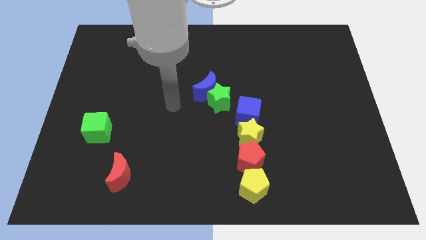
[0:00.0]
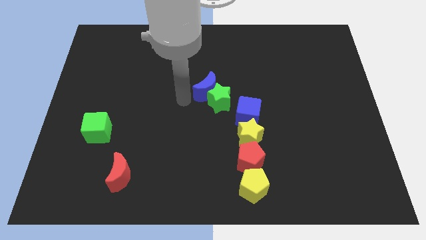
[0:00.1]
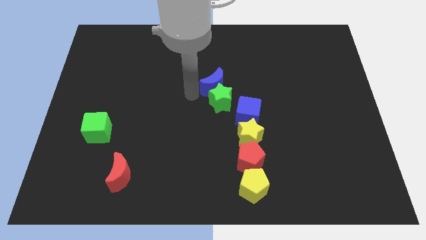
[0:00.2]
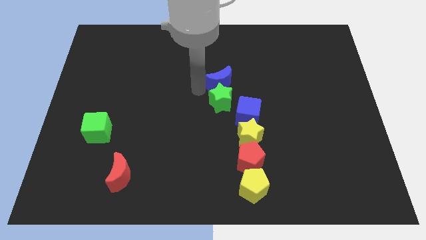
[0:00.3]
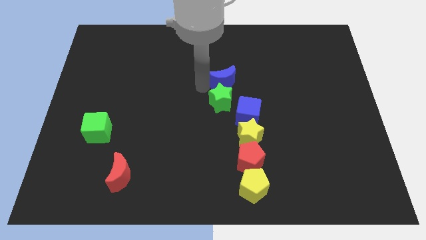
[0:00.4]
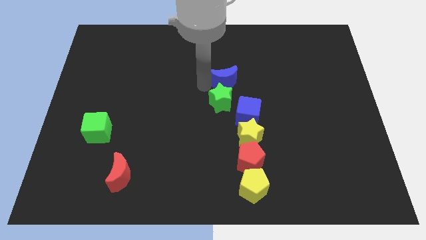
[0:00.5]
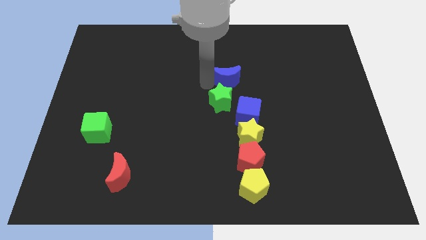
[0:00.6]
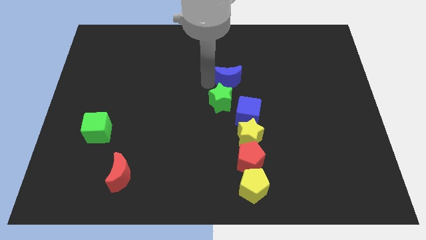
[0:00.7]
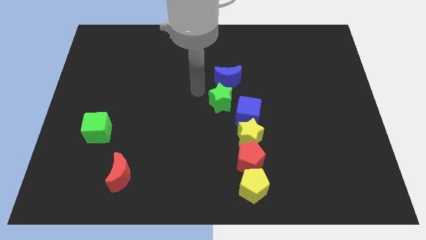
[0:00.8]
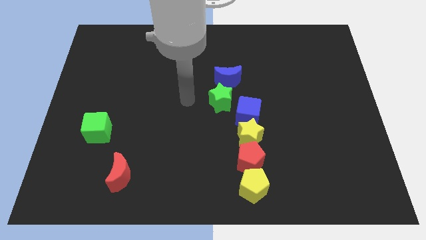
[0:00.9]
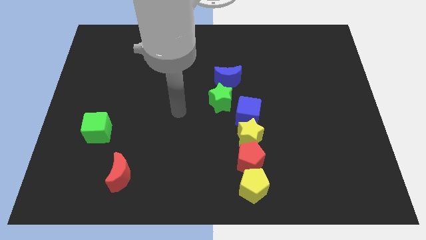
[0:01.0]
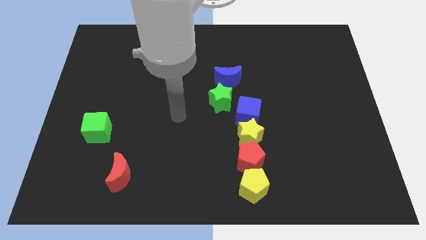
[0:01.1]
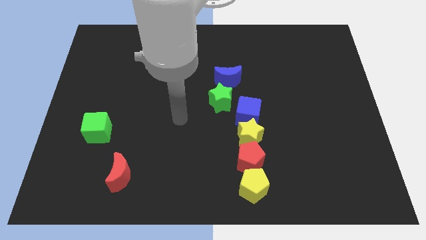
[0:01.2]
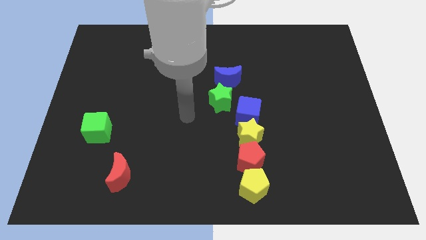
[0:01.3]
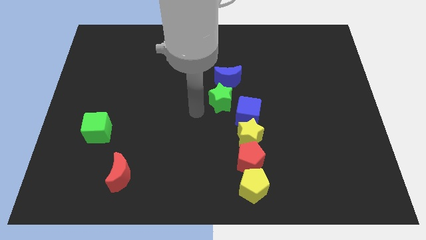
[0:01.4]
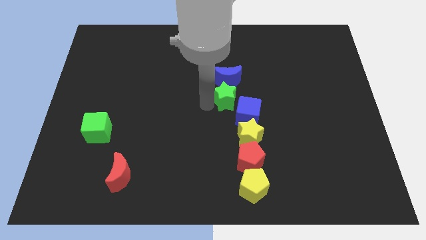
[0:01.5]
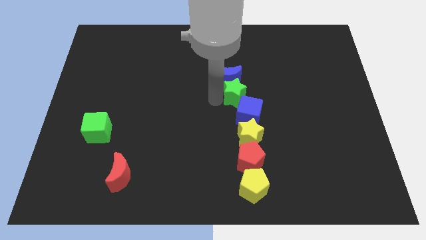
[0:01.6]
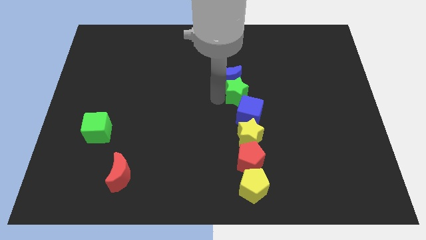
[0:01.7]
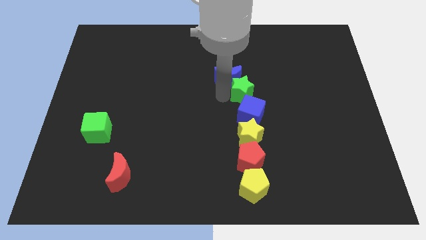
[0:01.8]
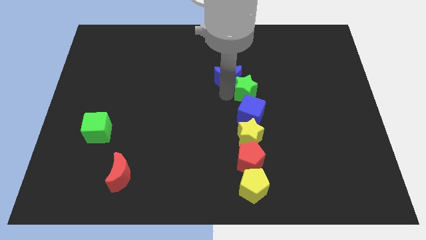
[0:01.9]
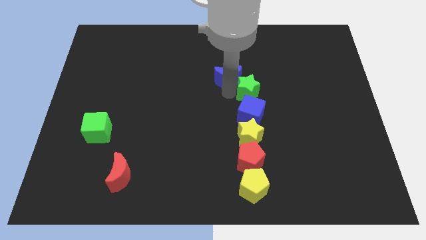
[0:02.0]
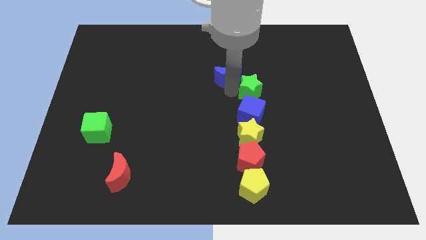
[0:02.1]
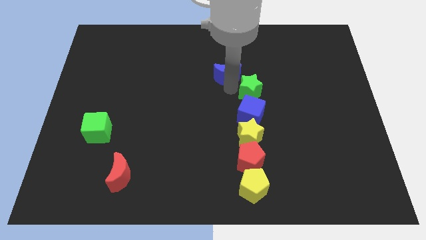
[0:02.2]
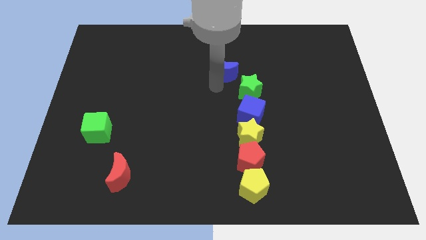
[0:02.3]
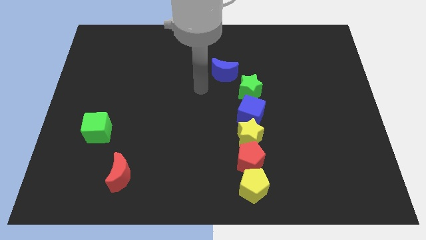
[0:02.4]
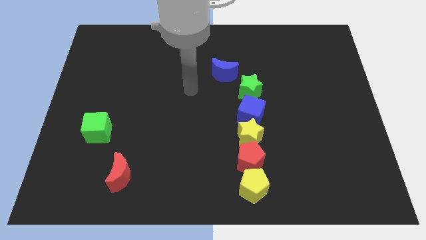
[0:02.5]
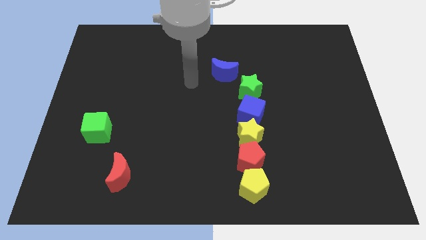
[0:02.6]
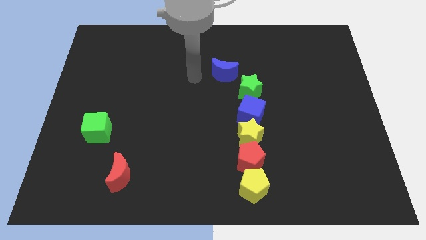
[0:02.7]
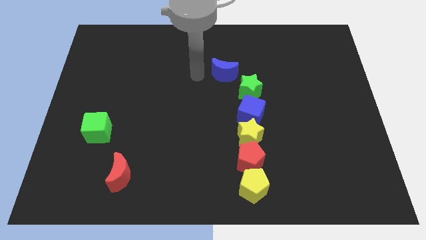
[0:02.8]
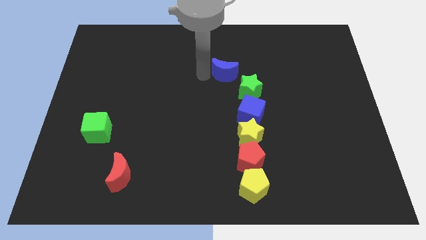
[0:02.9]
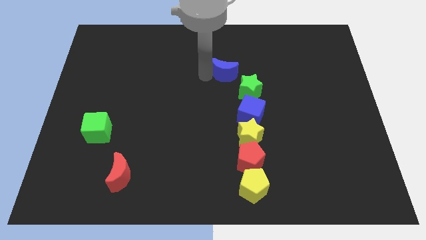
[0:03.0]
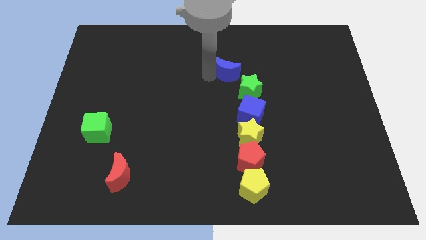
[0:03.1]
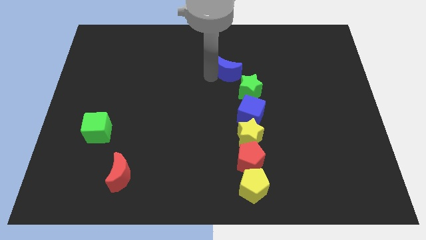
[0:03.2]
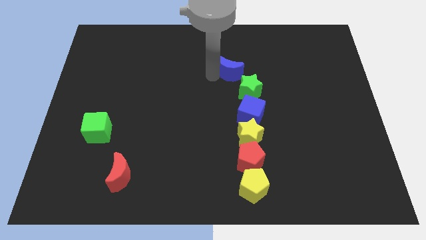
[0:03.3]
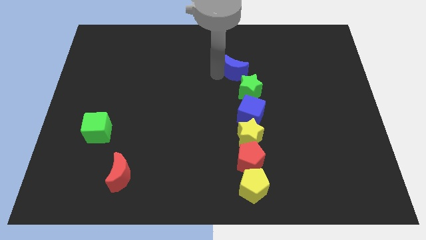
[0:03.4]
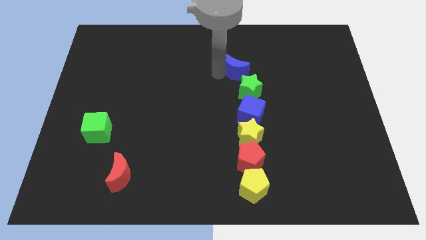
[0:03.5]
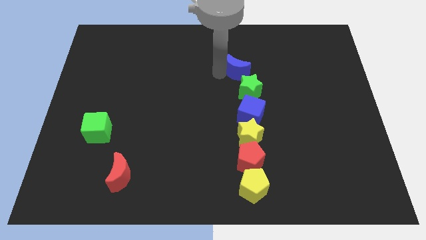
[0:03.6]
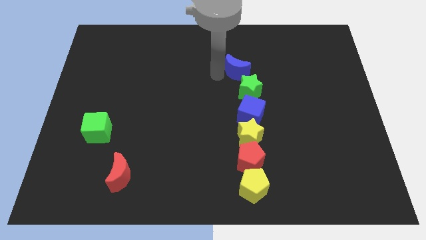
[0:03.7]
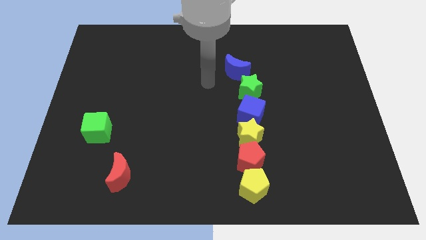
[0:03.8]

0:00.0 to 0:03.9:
place the green star and blue moon in a vertical line above the blue cube

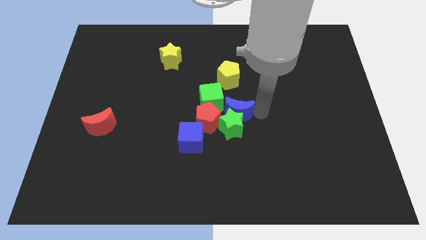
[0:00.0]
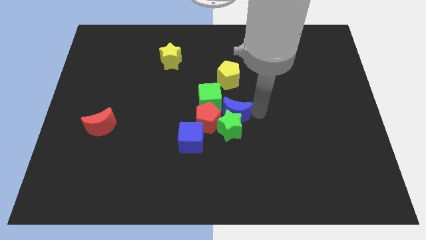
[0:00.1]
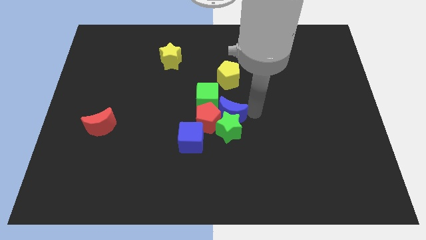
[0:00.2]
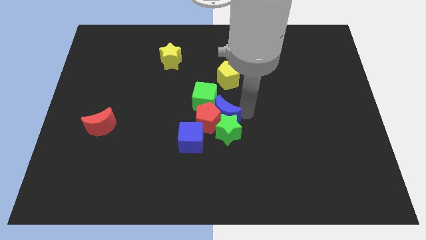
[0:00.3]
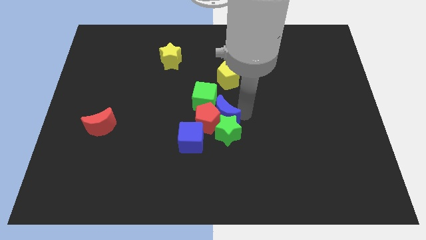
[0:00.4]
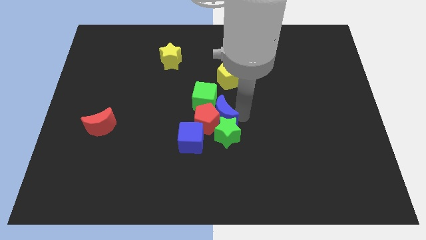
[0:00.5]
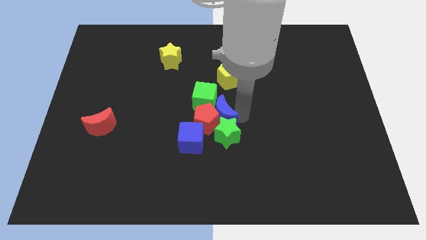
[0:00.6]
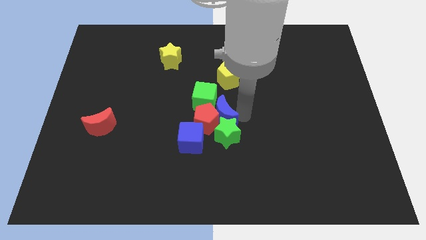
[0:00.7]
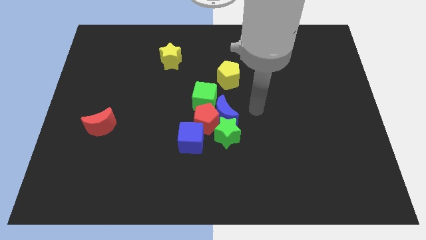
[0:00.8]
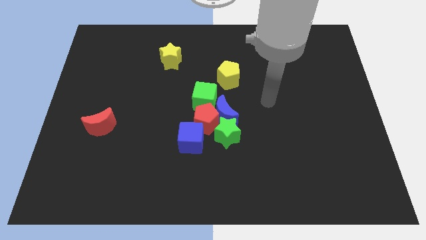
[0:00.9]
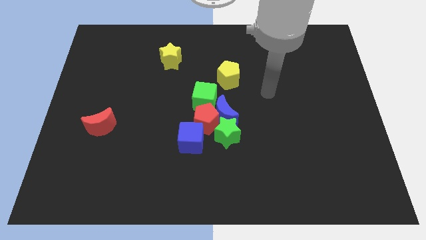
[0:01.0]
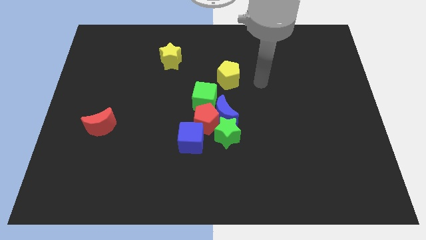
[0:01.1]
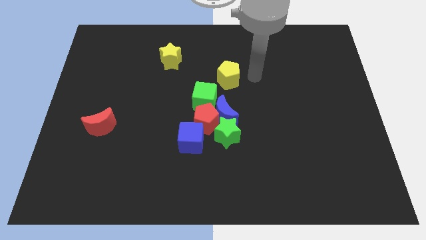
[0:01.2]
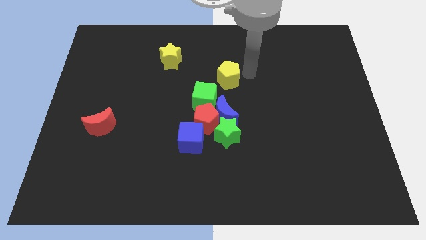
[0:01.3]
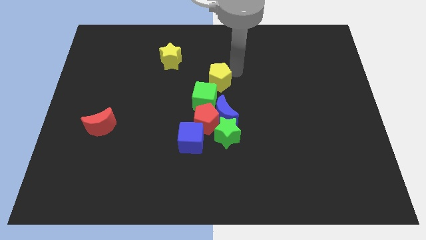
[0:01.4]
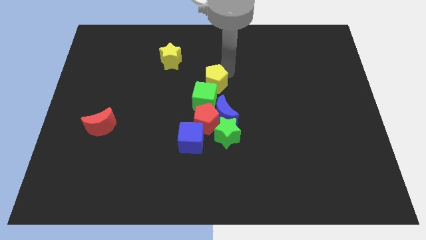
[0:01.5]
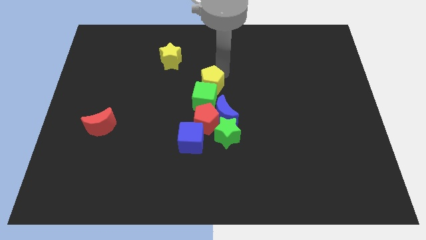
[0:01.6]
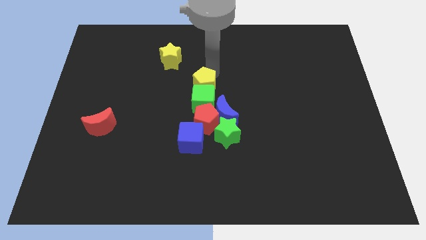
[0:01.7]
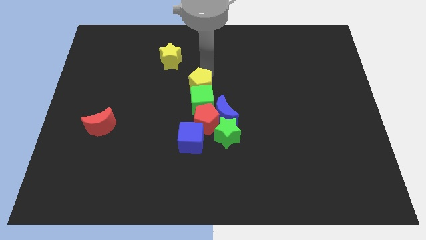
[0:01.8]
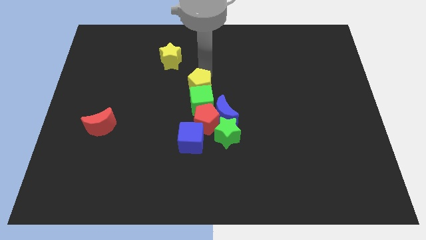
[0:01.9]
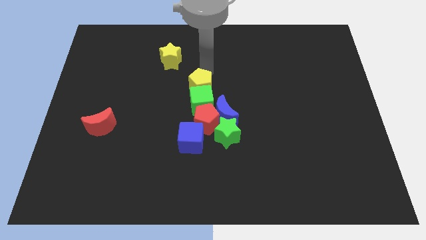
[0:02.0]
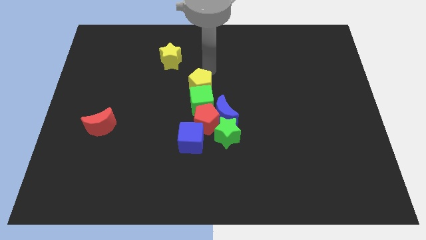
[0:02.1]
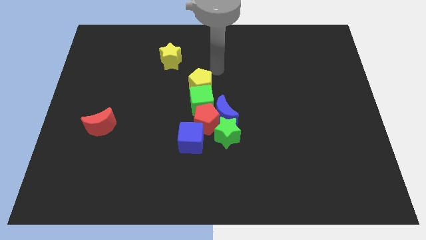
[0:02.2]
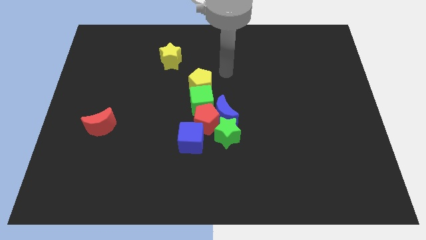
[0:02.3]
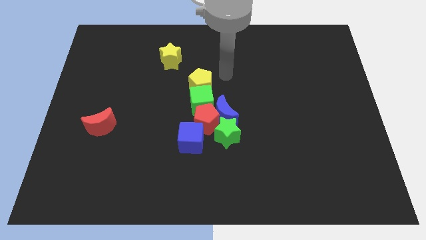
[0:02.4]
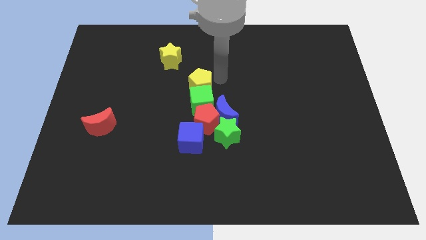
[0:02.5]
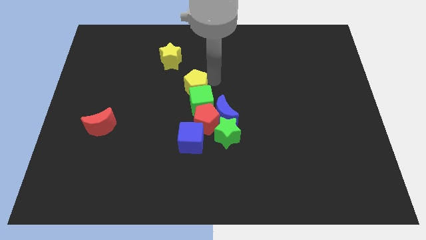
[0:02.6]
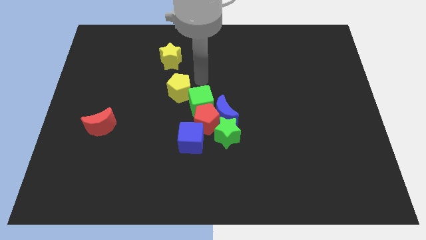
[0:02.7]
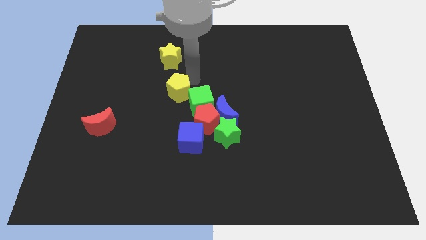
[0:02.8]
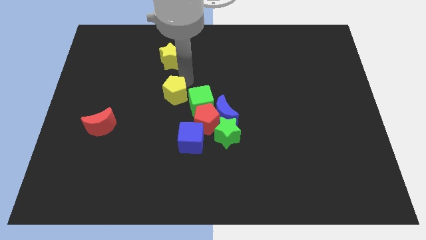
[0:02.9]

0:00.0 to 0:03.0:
place the yellow pentagon diagonally to the top left of the green cube

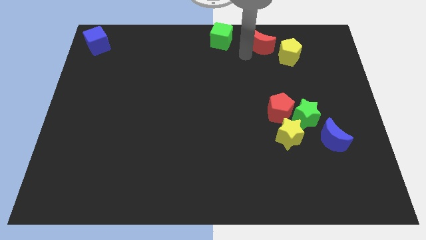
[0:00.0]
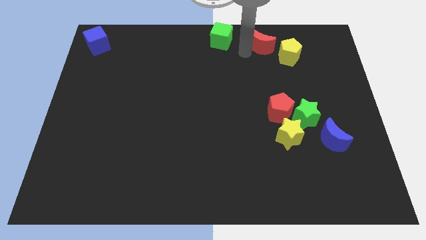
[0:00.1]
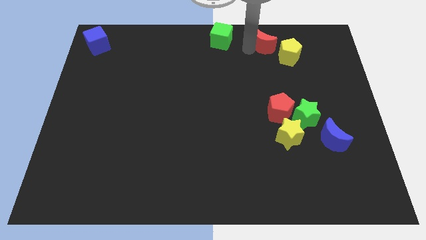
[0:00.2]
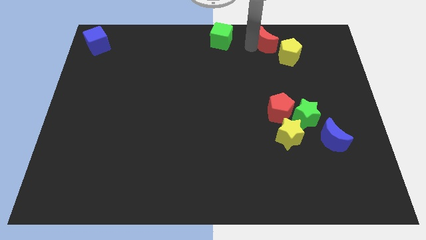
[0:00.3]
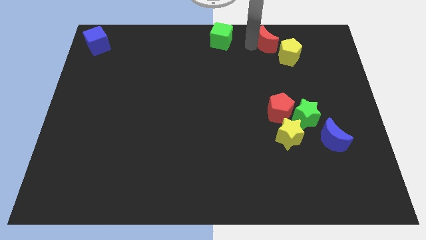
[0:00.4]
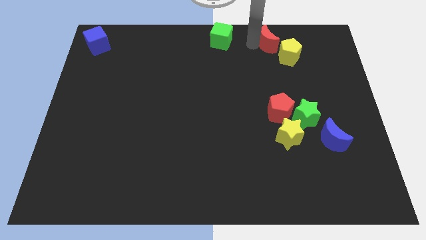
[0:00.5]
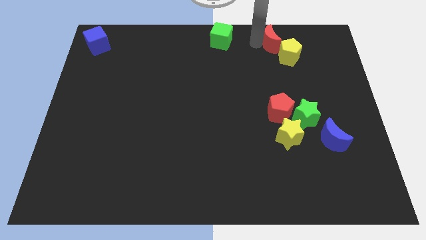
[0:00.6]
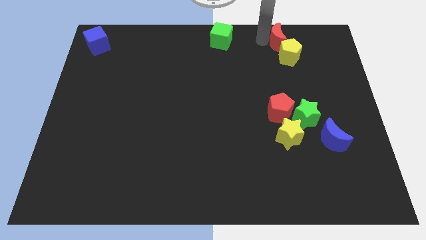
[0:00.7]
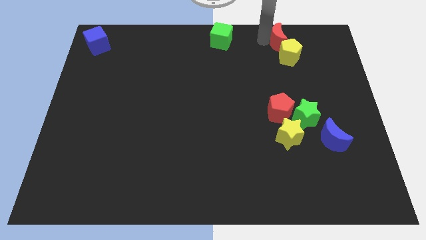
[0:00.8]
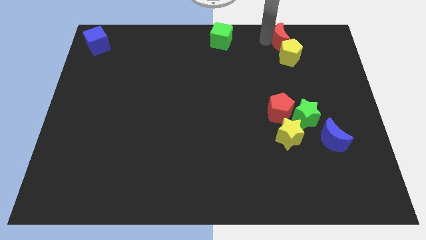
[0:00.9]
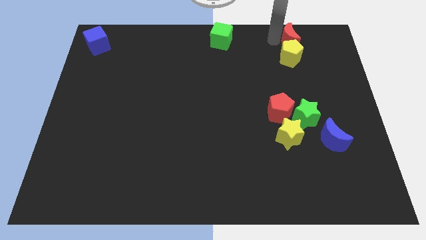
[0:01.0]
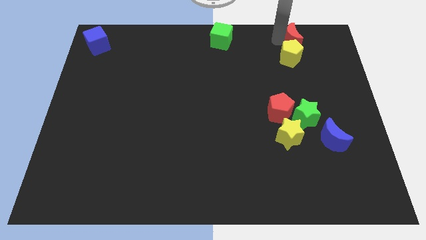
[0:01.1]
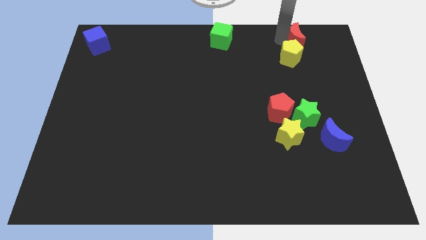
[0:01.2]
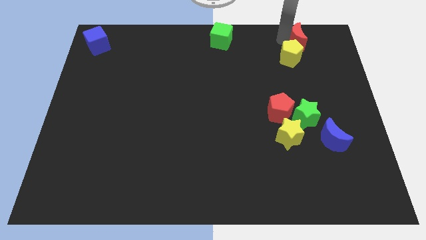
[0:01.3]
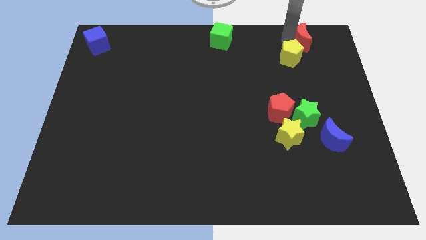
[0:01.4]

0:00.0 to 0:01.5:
place the red moon above the yellow pentagon

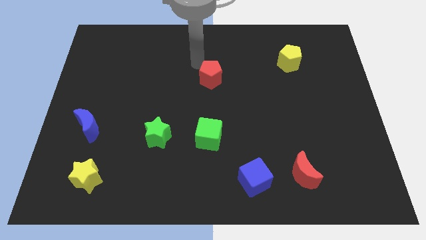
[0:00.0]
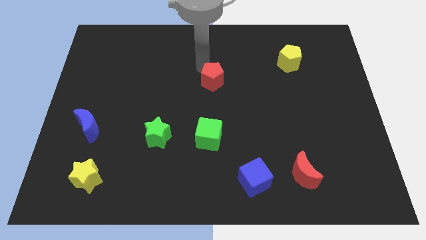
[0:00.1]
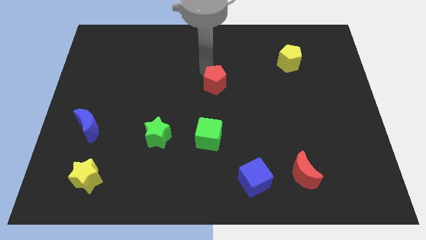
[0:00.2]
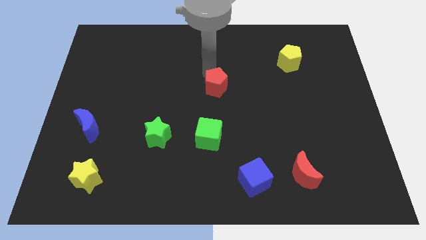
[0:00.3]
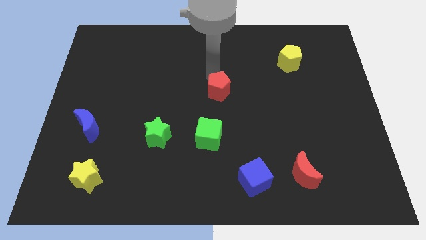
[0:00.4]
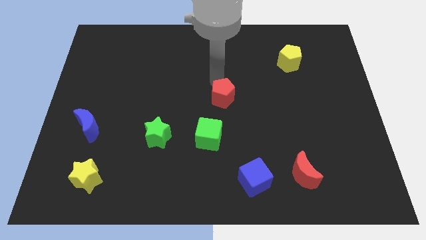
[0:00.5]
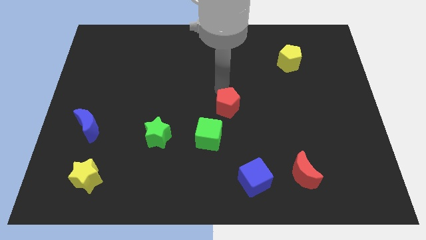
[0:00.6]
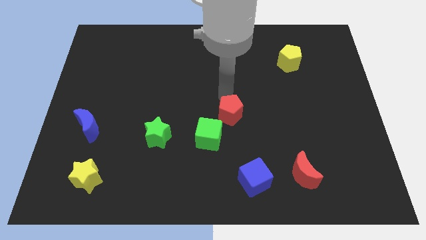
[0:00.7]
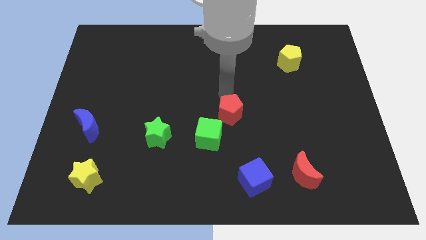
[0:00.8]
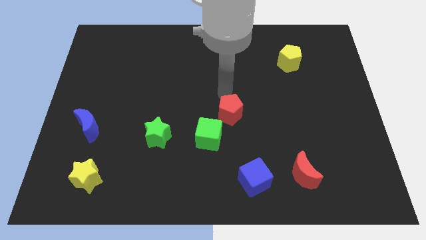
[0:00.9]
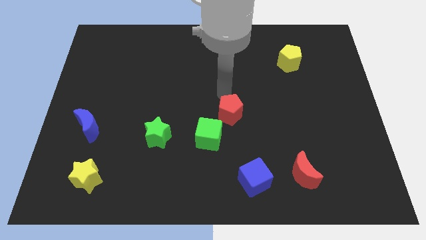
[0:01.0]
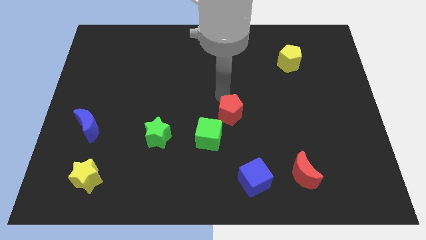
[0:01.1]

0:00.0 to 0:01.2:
push the red pentagon slightly towards the blue cube
